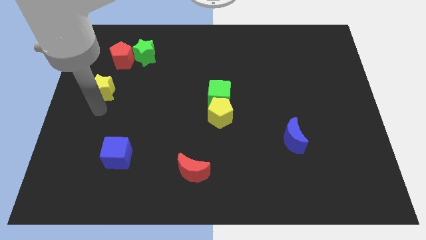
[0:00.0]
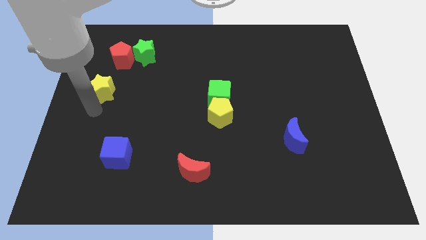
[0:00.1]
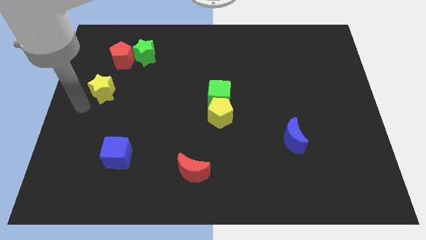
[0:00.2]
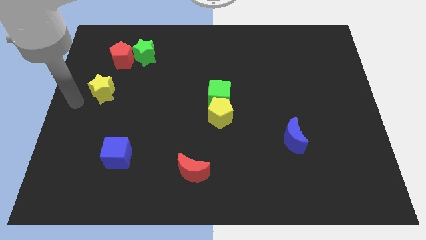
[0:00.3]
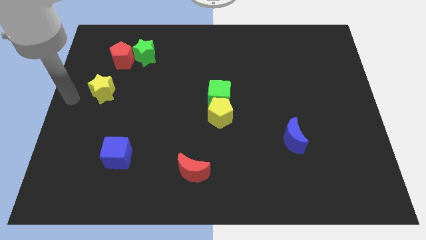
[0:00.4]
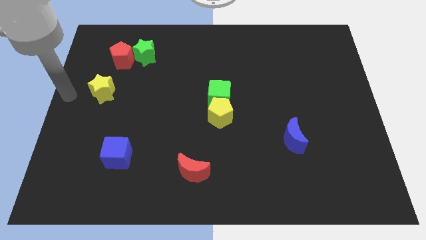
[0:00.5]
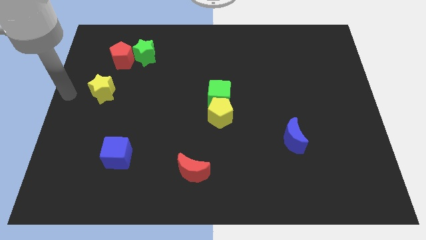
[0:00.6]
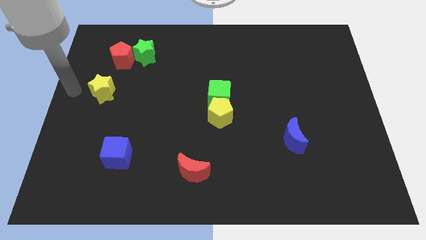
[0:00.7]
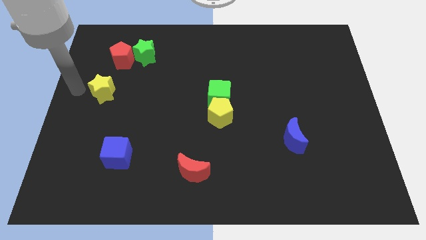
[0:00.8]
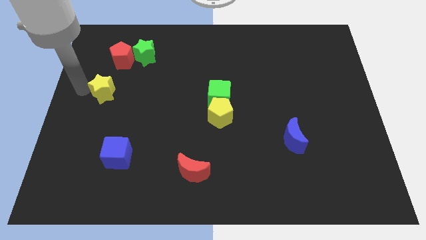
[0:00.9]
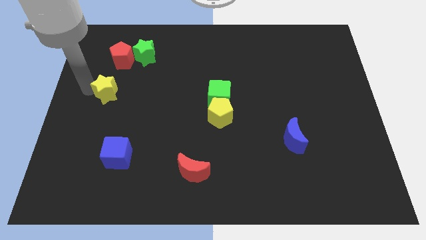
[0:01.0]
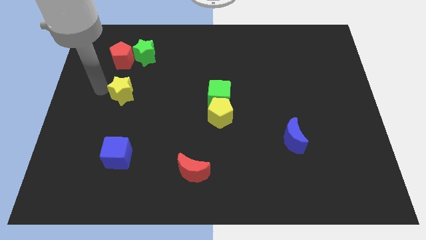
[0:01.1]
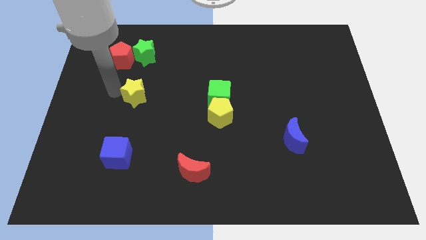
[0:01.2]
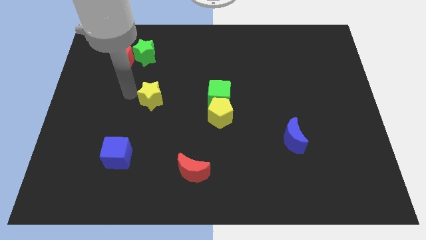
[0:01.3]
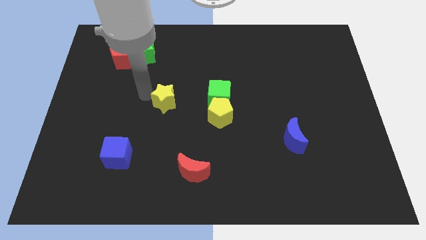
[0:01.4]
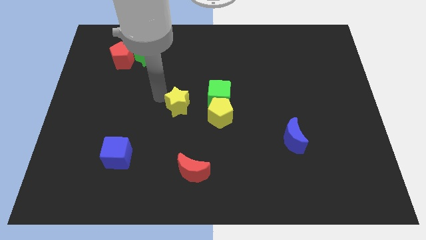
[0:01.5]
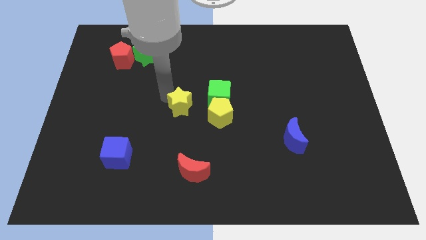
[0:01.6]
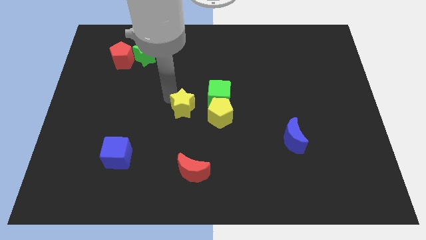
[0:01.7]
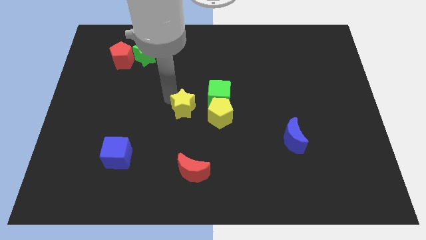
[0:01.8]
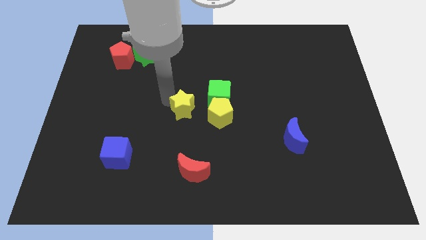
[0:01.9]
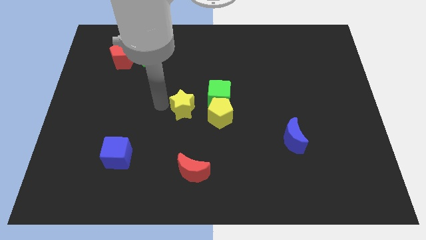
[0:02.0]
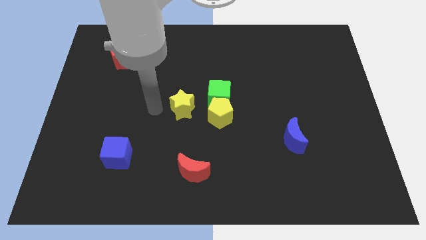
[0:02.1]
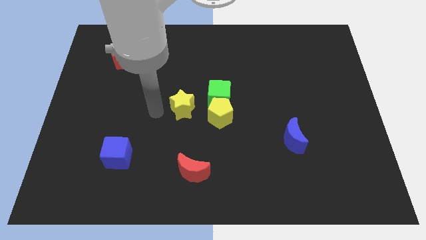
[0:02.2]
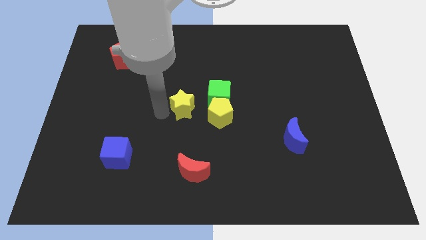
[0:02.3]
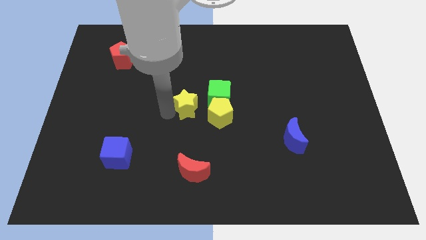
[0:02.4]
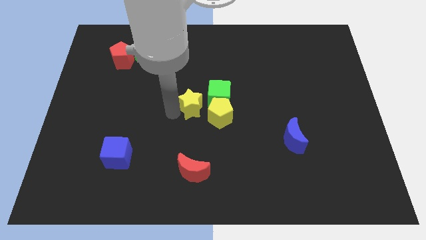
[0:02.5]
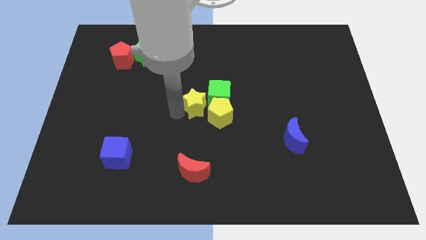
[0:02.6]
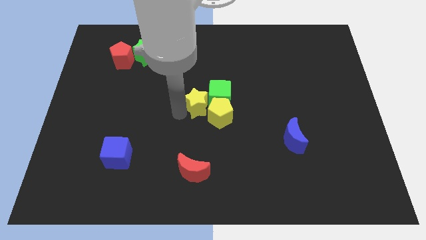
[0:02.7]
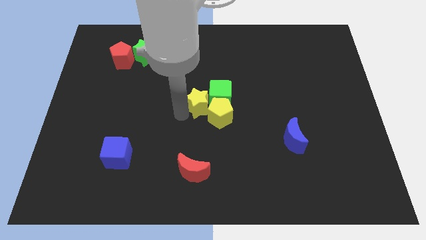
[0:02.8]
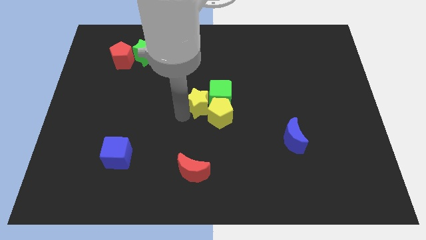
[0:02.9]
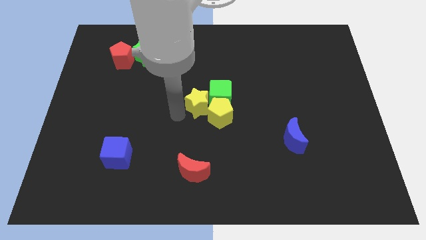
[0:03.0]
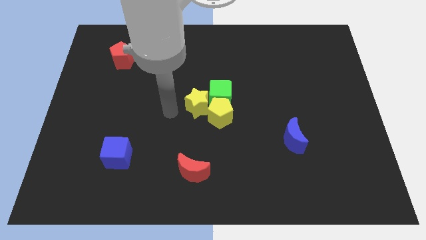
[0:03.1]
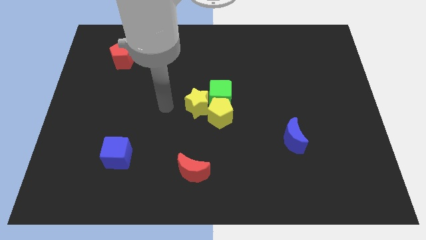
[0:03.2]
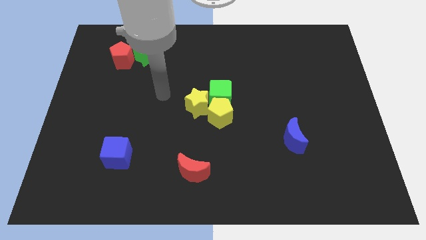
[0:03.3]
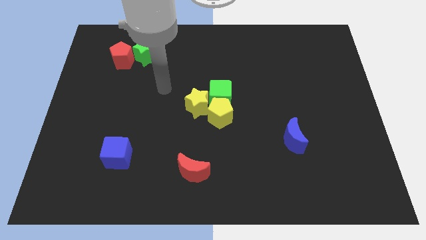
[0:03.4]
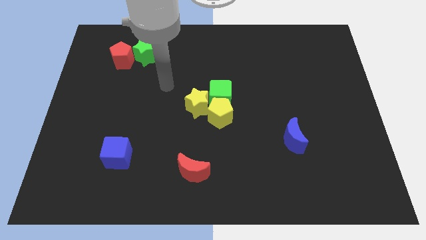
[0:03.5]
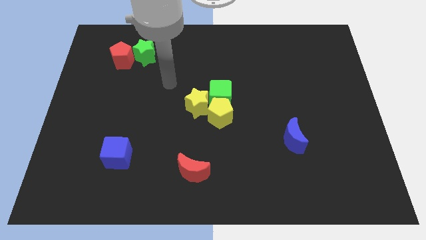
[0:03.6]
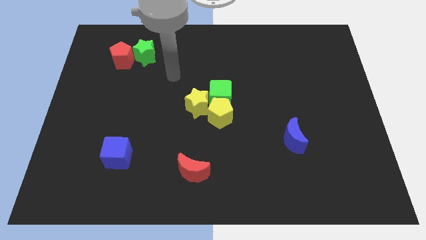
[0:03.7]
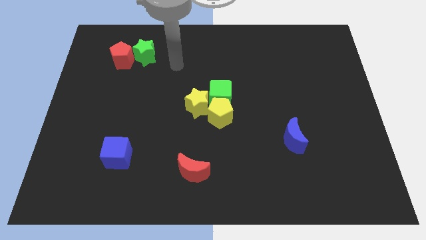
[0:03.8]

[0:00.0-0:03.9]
place the yellow star to the group of object

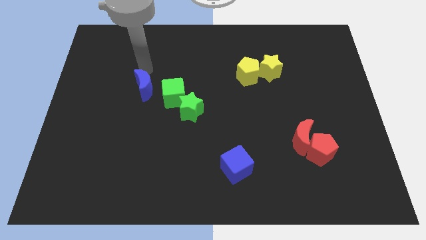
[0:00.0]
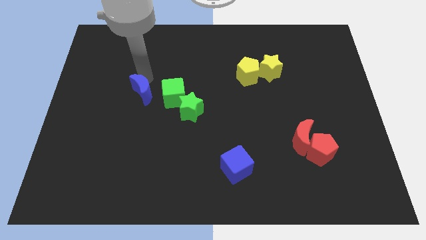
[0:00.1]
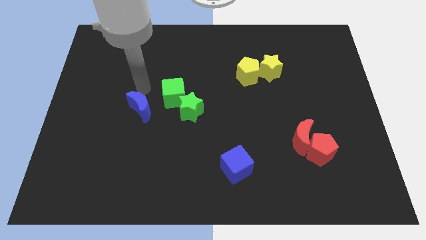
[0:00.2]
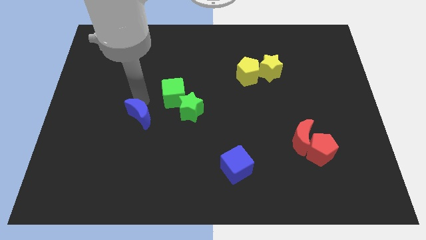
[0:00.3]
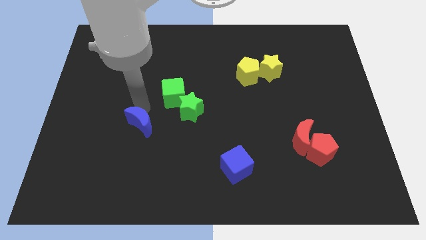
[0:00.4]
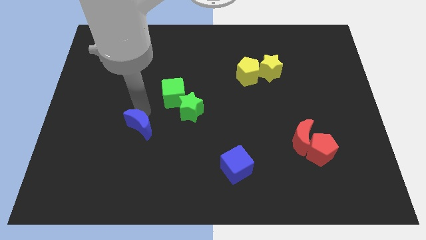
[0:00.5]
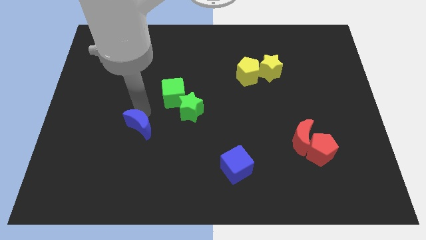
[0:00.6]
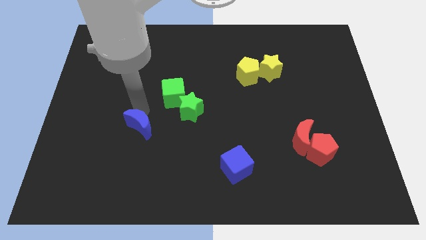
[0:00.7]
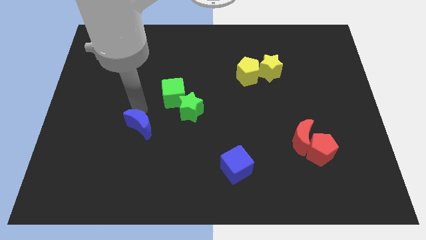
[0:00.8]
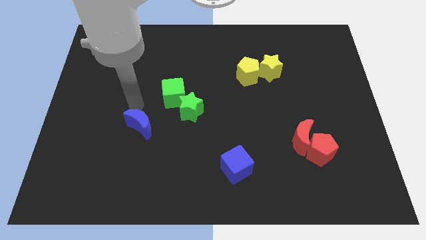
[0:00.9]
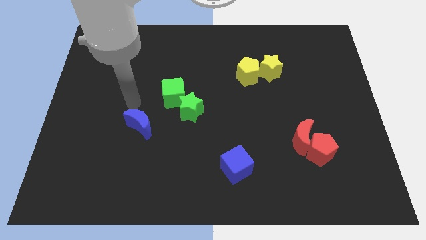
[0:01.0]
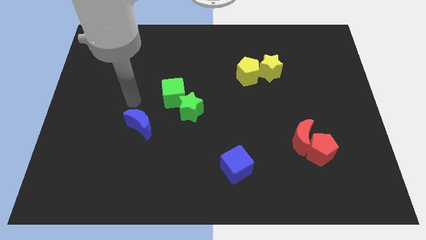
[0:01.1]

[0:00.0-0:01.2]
push the blue moon downwards

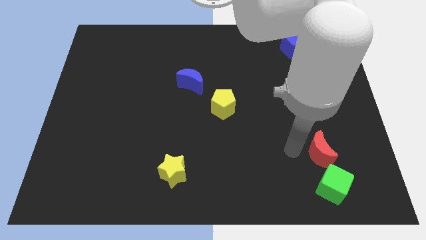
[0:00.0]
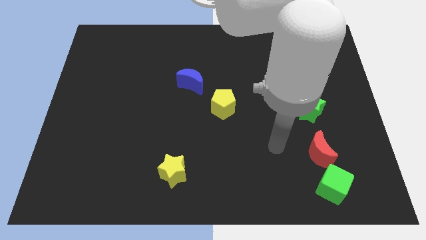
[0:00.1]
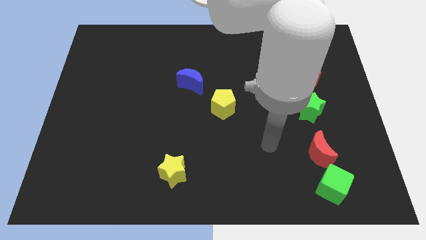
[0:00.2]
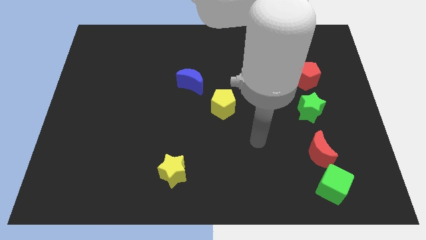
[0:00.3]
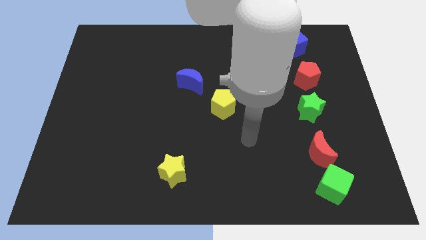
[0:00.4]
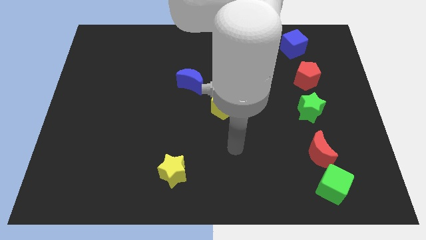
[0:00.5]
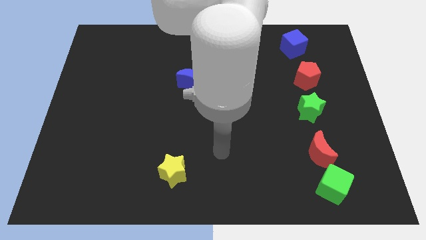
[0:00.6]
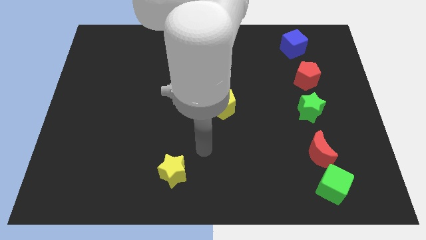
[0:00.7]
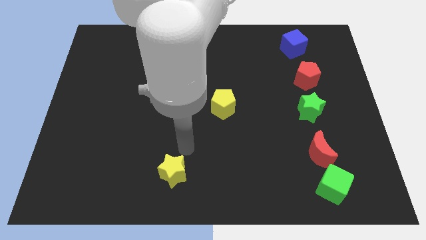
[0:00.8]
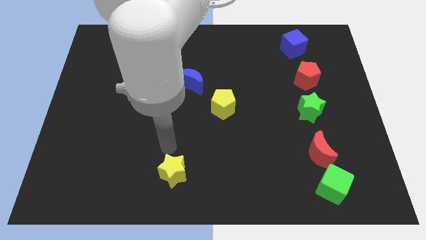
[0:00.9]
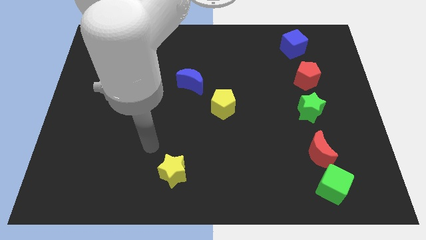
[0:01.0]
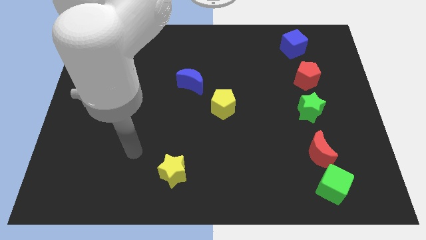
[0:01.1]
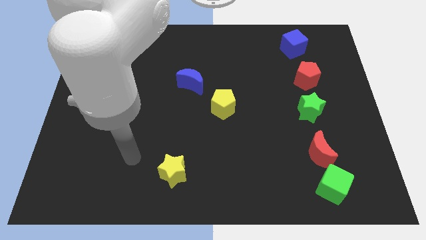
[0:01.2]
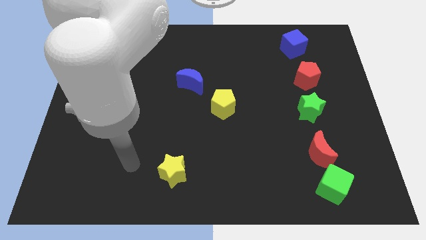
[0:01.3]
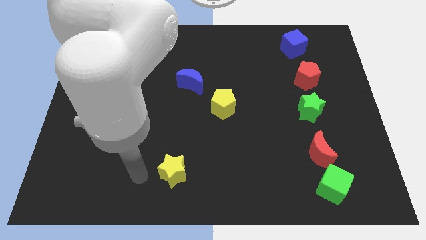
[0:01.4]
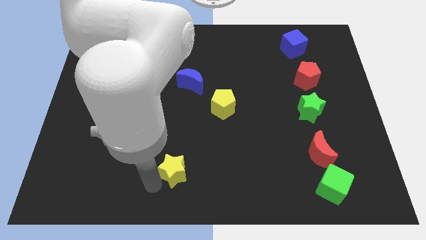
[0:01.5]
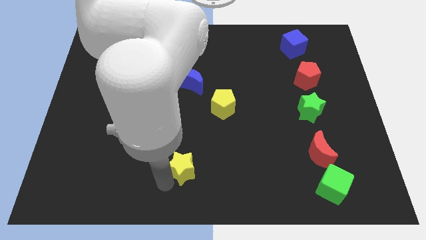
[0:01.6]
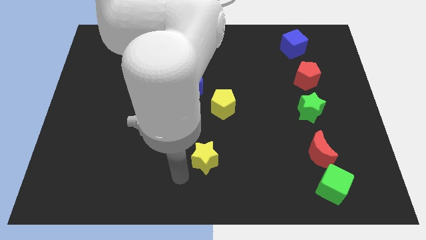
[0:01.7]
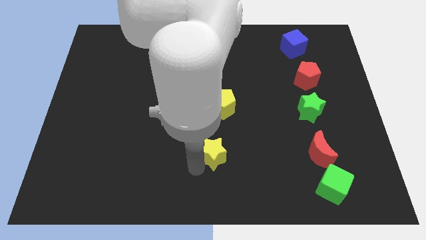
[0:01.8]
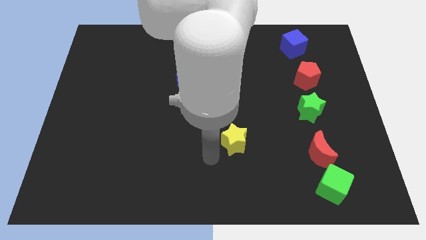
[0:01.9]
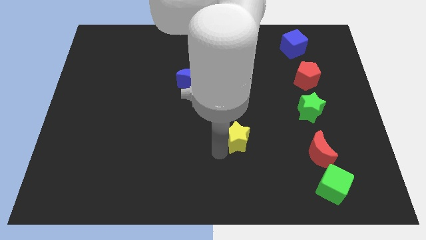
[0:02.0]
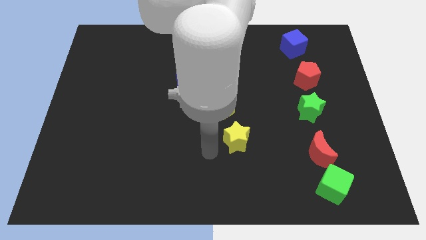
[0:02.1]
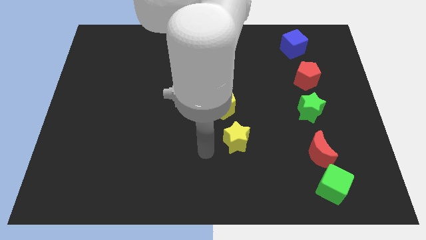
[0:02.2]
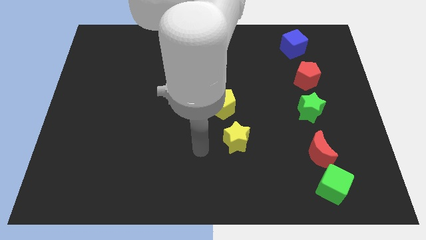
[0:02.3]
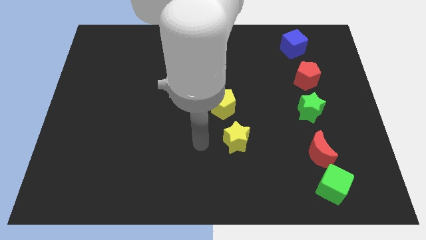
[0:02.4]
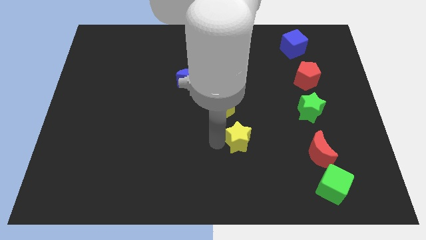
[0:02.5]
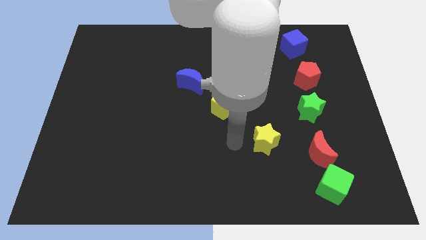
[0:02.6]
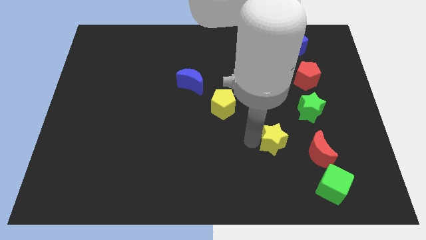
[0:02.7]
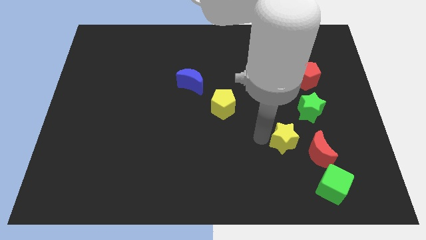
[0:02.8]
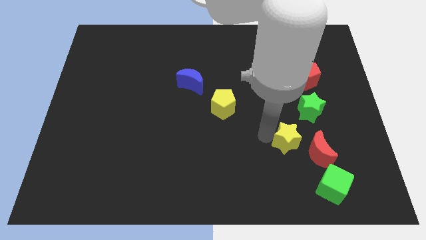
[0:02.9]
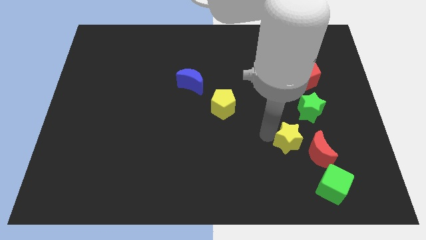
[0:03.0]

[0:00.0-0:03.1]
move yellow star left of red crescent

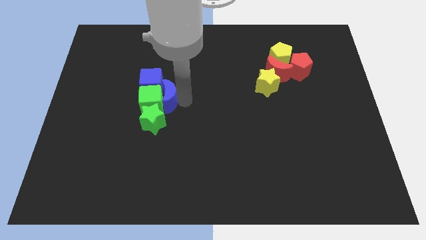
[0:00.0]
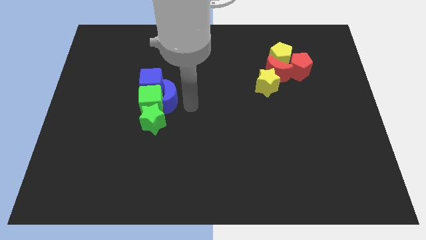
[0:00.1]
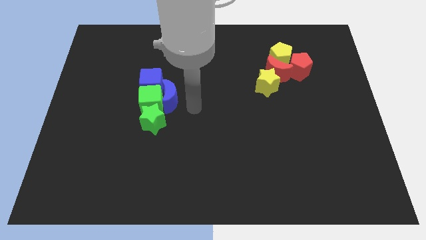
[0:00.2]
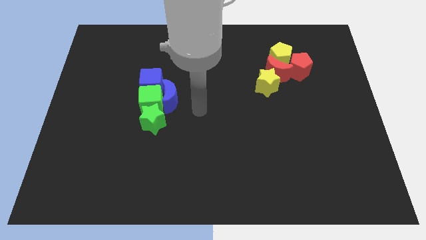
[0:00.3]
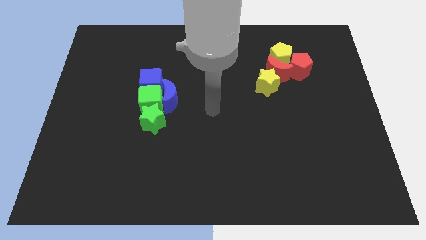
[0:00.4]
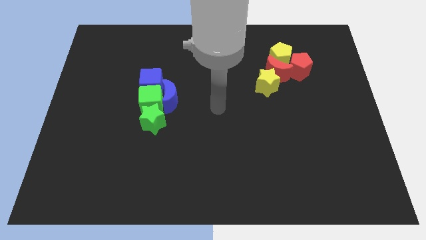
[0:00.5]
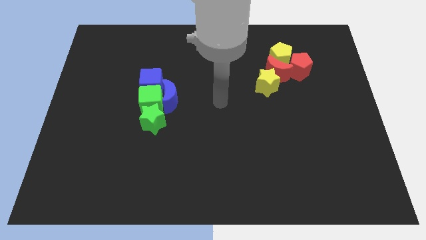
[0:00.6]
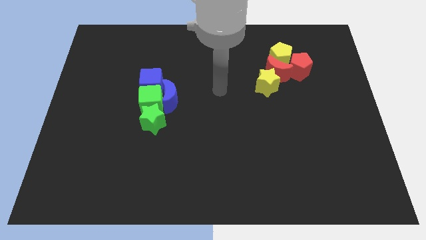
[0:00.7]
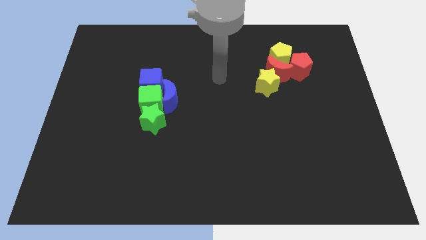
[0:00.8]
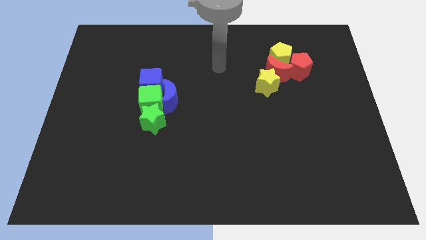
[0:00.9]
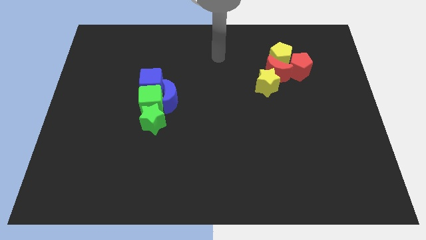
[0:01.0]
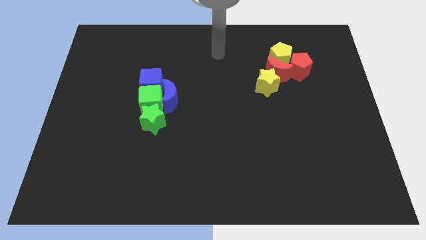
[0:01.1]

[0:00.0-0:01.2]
move your arm towards the top center of board
